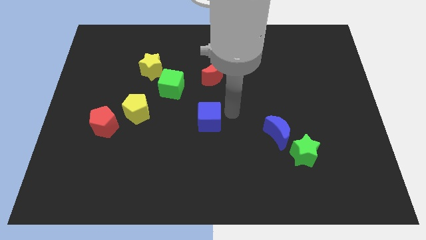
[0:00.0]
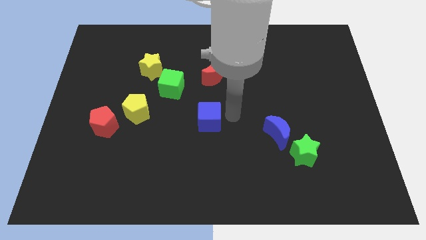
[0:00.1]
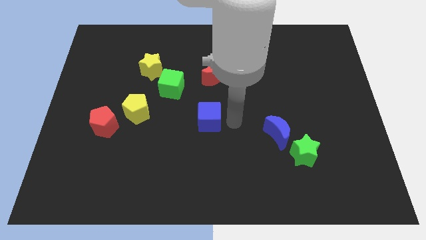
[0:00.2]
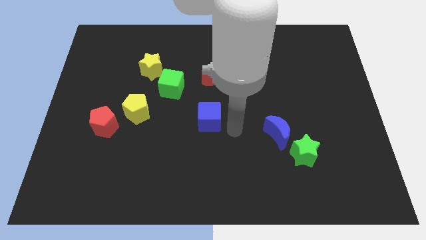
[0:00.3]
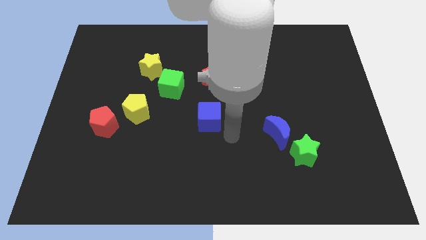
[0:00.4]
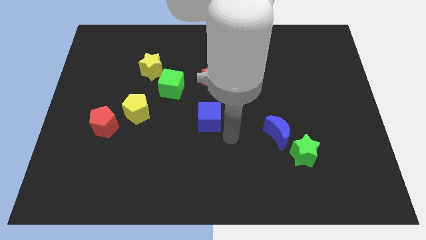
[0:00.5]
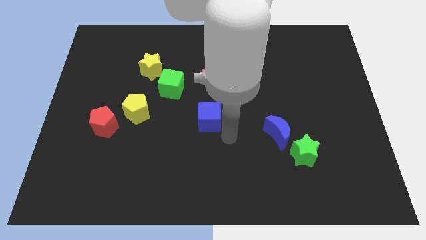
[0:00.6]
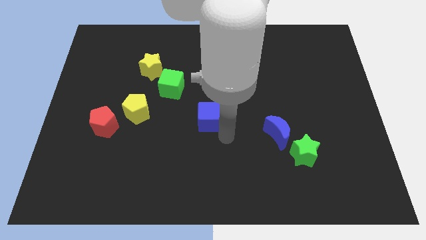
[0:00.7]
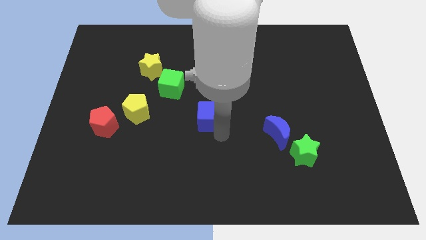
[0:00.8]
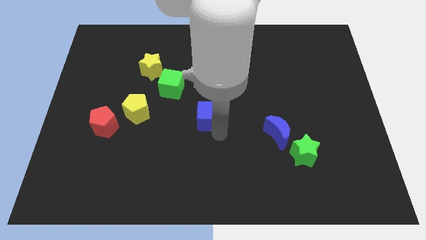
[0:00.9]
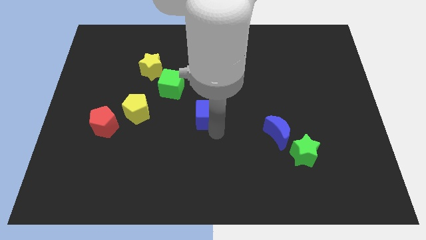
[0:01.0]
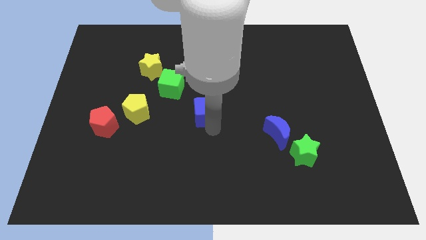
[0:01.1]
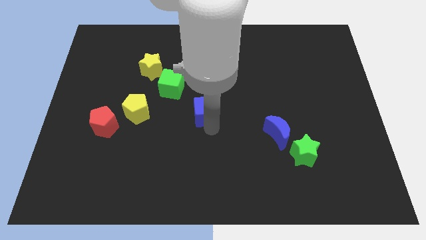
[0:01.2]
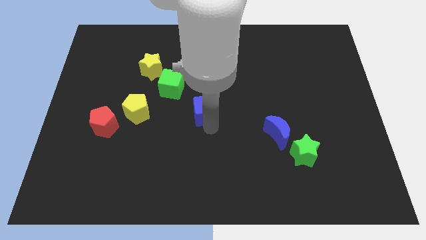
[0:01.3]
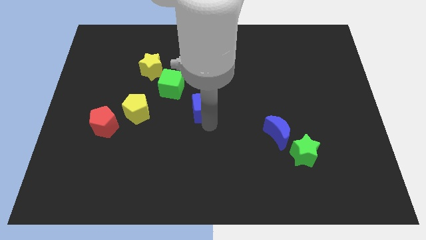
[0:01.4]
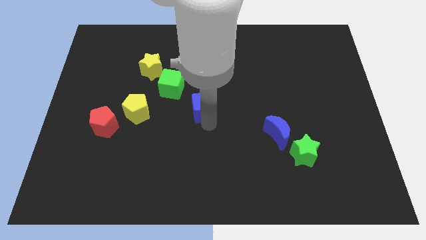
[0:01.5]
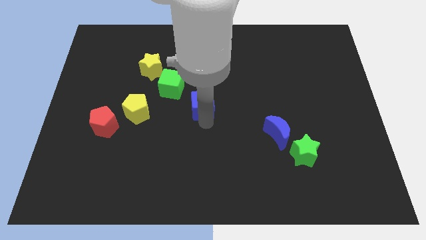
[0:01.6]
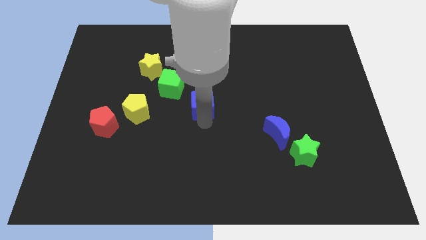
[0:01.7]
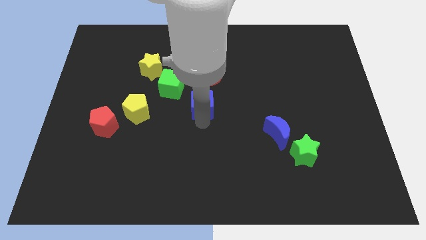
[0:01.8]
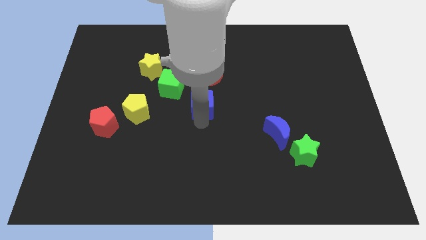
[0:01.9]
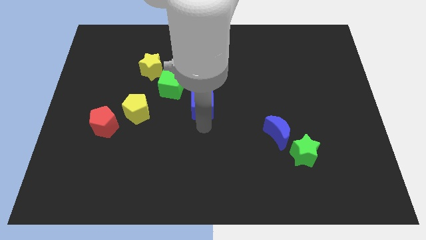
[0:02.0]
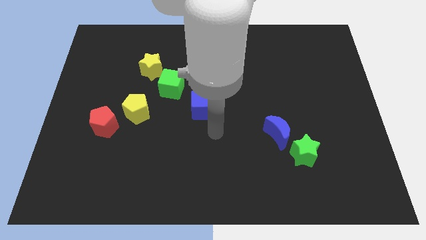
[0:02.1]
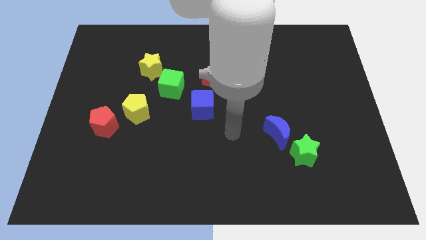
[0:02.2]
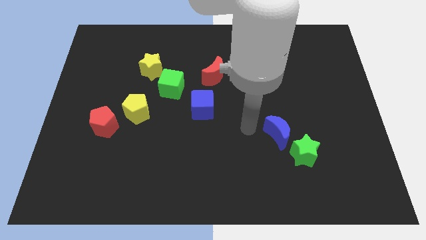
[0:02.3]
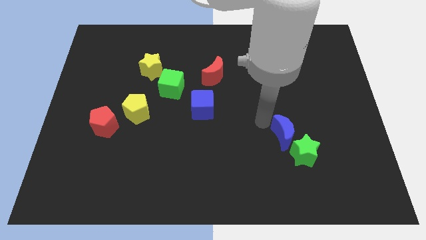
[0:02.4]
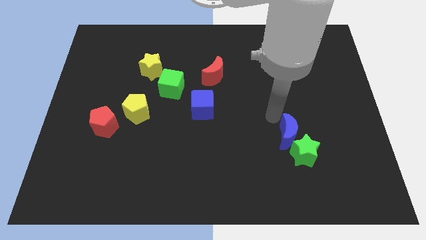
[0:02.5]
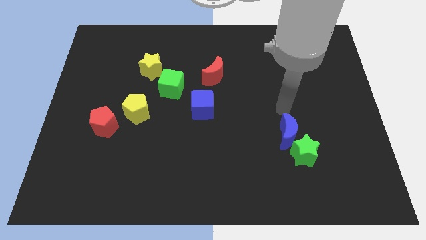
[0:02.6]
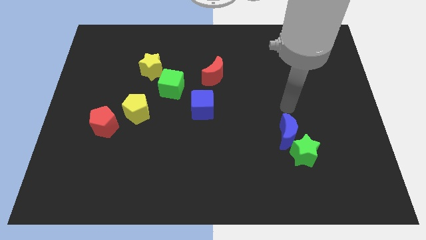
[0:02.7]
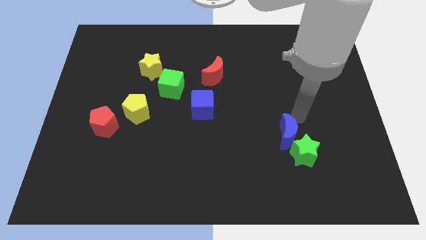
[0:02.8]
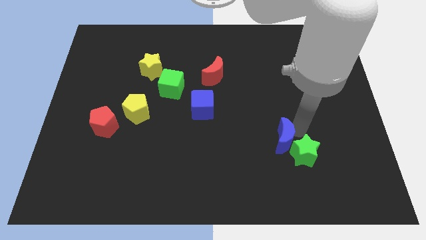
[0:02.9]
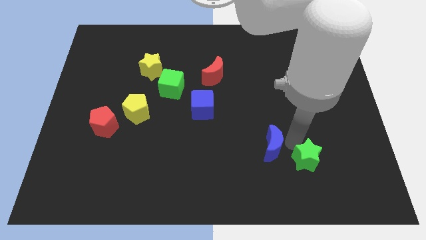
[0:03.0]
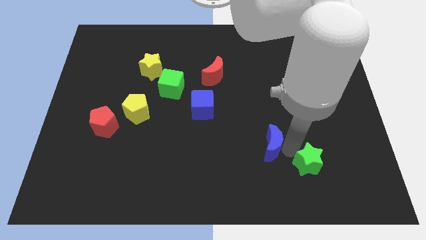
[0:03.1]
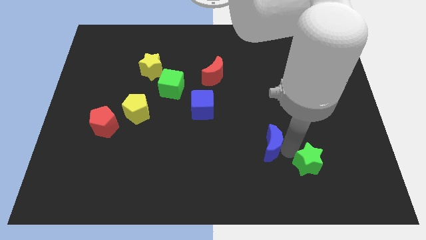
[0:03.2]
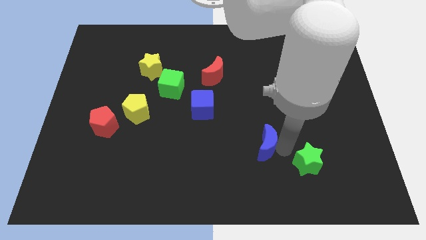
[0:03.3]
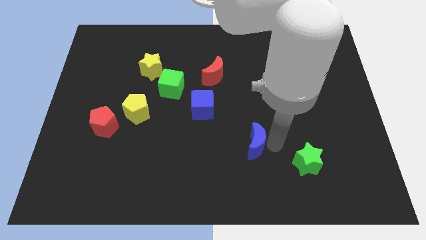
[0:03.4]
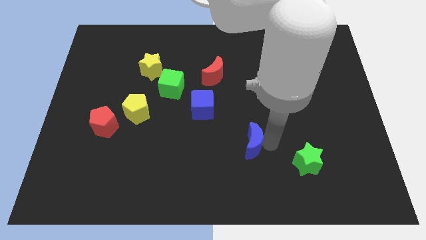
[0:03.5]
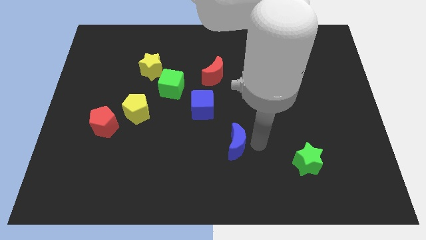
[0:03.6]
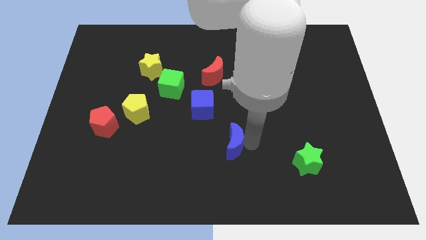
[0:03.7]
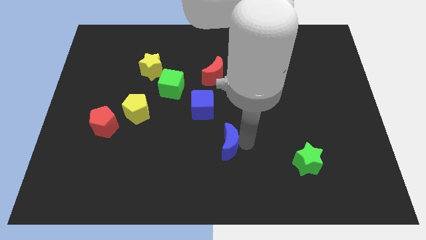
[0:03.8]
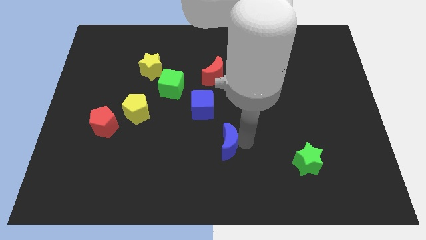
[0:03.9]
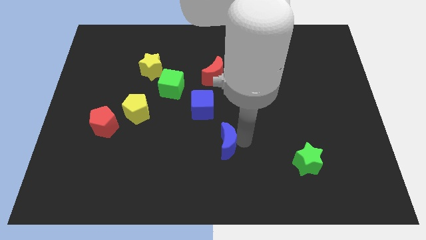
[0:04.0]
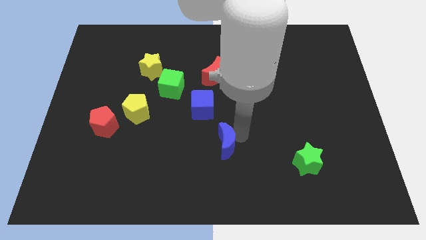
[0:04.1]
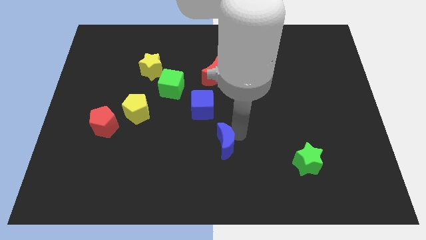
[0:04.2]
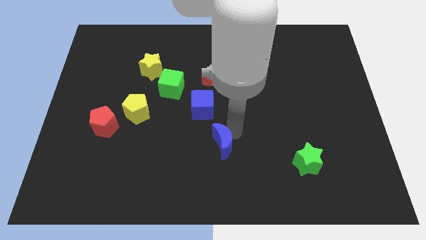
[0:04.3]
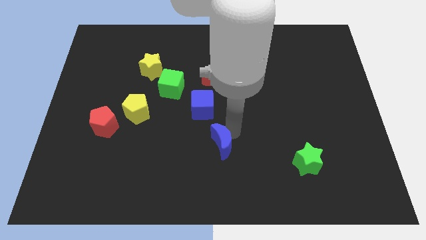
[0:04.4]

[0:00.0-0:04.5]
slightly move the blue crescent towards blue cube

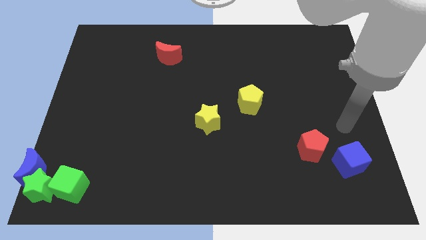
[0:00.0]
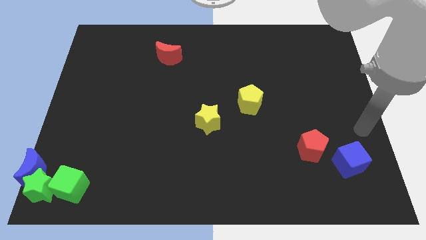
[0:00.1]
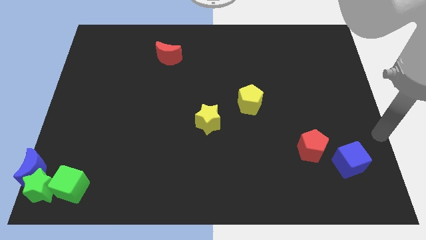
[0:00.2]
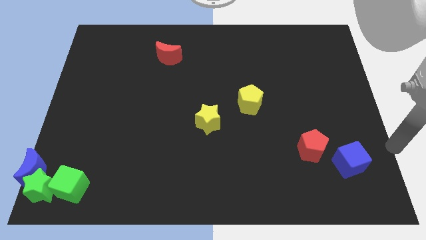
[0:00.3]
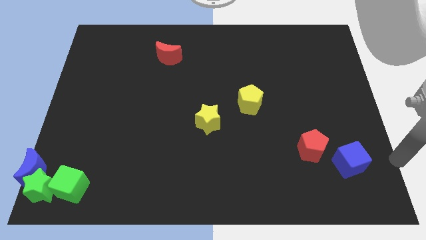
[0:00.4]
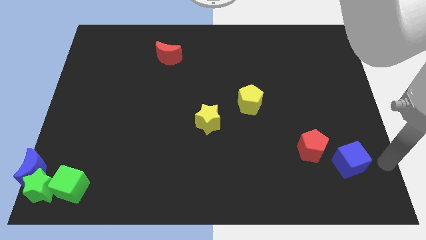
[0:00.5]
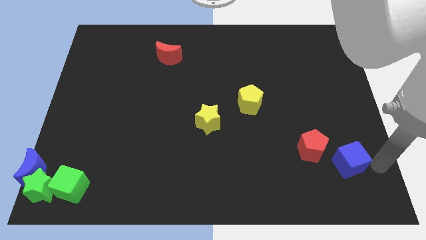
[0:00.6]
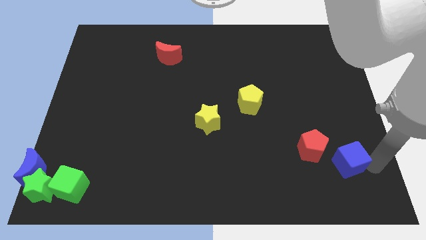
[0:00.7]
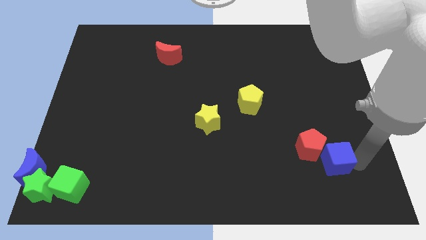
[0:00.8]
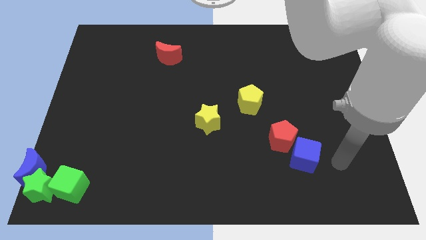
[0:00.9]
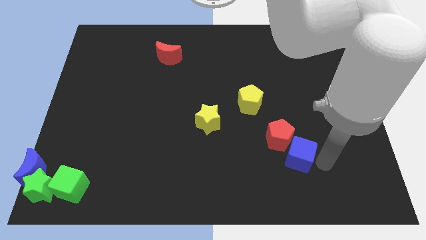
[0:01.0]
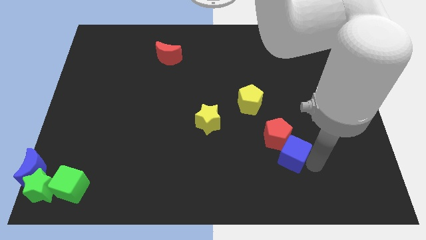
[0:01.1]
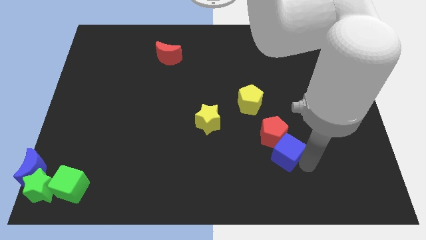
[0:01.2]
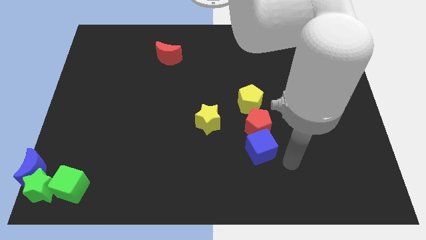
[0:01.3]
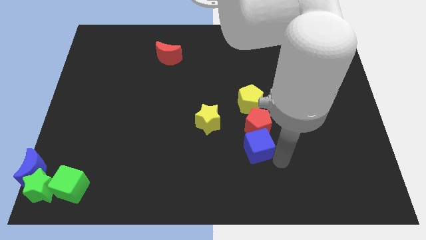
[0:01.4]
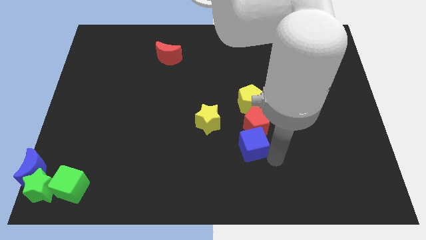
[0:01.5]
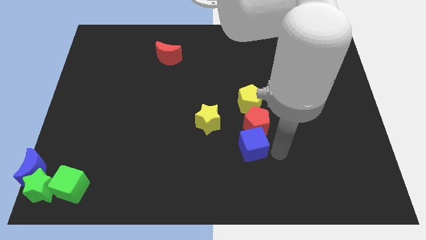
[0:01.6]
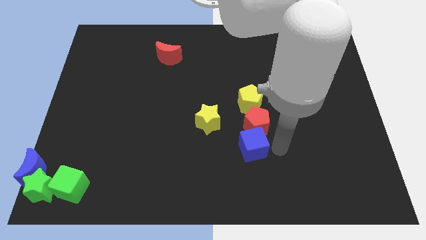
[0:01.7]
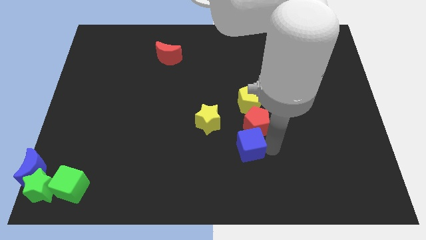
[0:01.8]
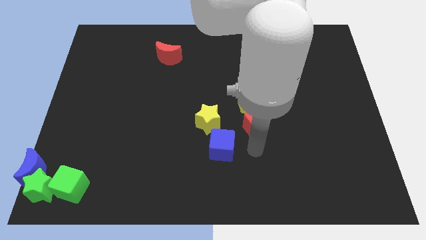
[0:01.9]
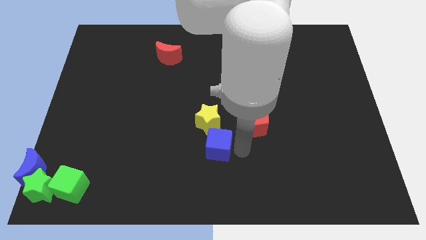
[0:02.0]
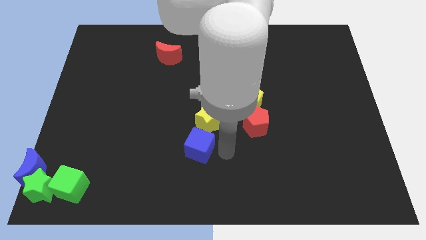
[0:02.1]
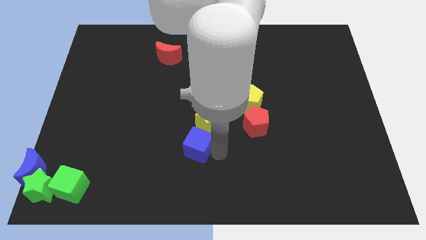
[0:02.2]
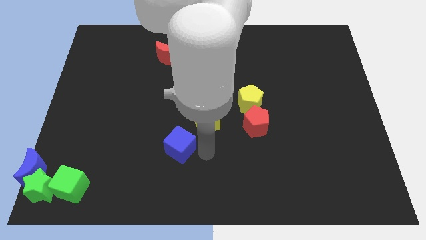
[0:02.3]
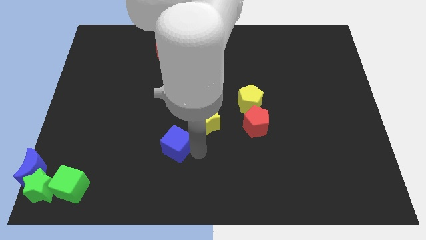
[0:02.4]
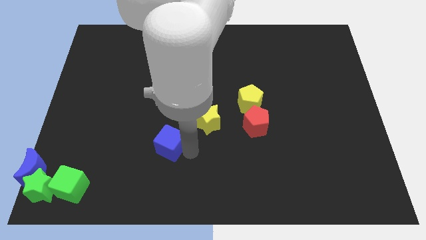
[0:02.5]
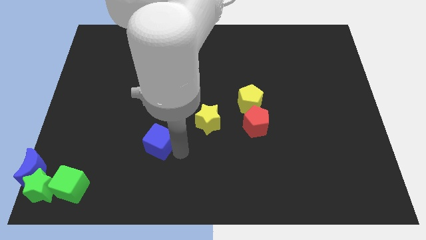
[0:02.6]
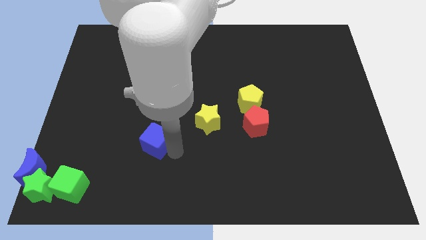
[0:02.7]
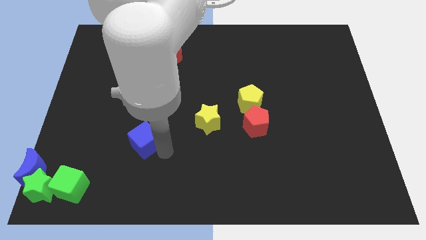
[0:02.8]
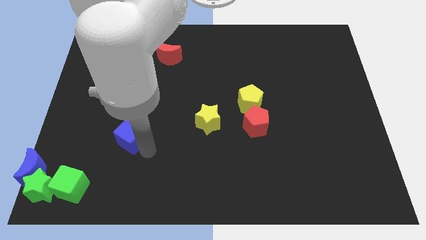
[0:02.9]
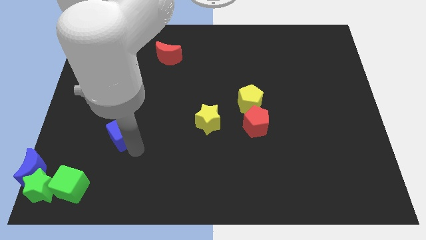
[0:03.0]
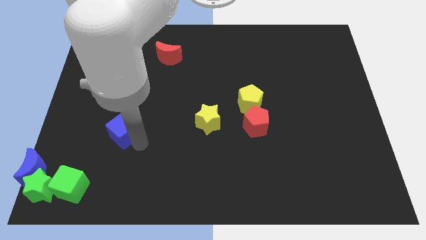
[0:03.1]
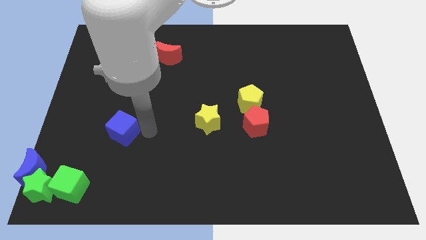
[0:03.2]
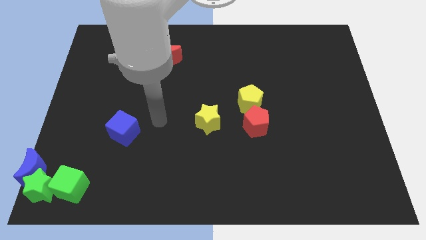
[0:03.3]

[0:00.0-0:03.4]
move the blue cube to the horizontal left of the yellow star

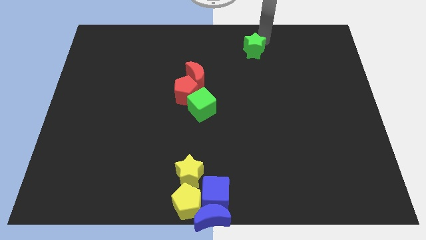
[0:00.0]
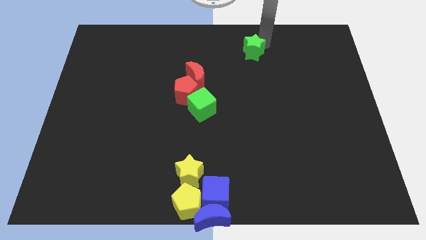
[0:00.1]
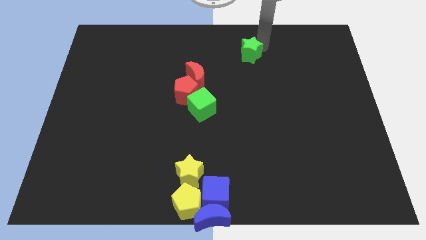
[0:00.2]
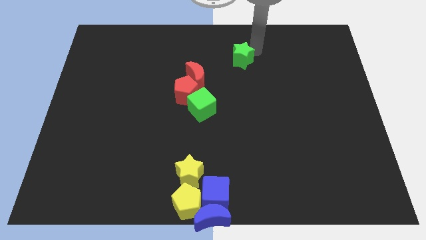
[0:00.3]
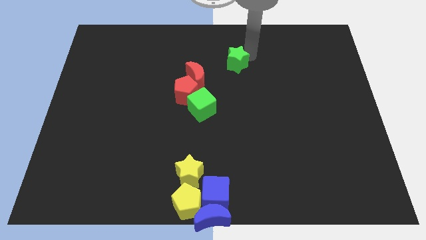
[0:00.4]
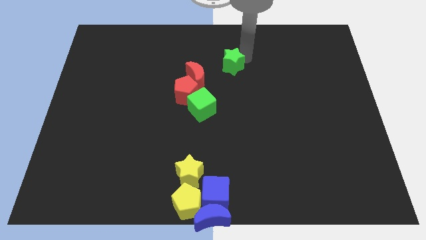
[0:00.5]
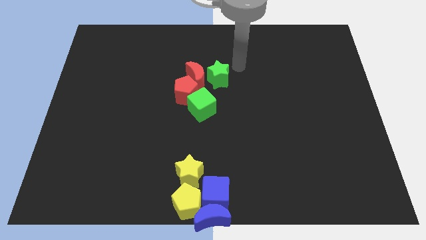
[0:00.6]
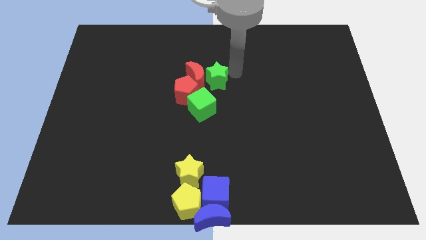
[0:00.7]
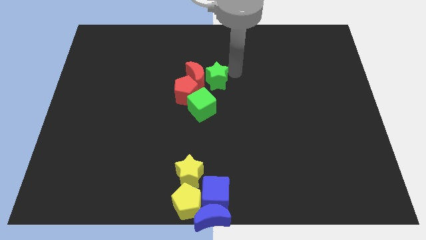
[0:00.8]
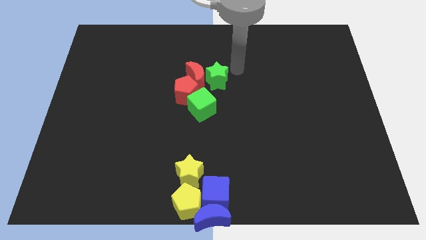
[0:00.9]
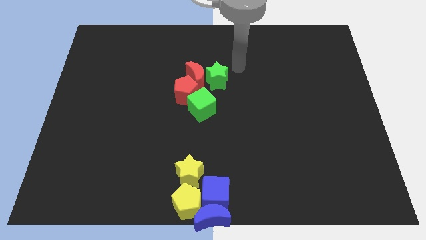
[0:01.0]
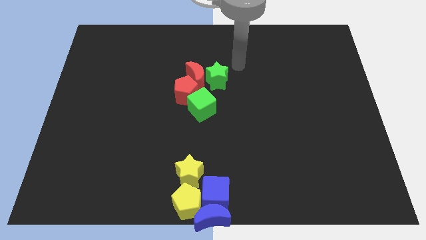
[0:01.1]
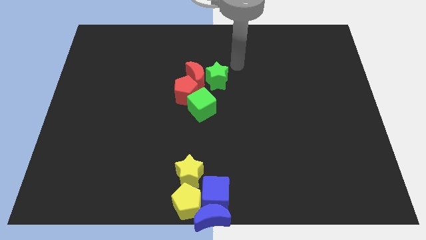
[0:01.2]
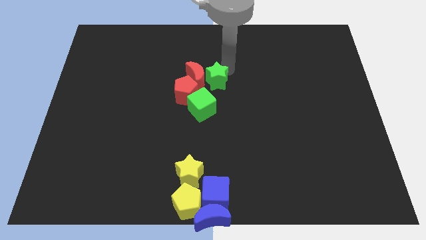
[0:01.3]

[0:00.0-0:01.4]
push the green star right to the red crescent
